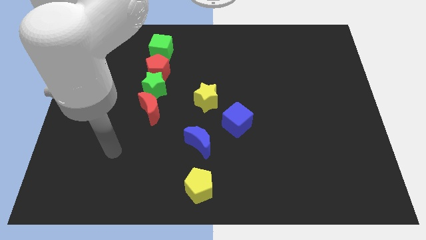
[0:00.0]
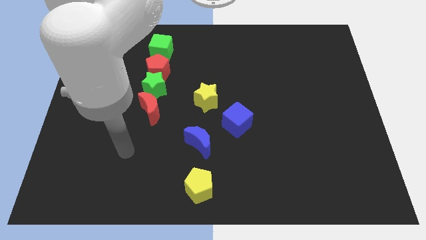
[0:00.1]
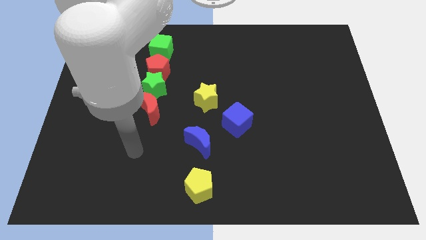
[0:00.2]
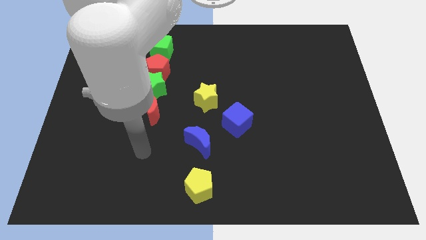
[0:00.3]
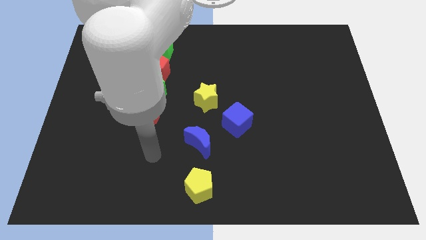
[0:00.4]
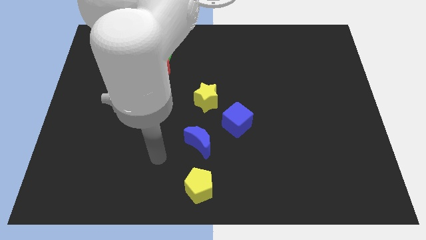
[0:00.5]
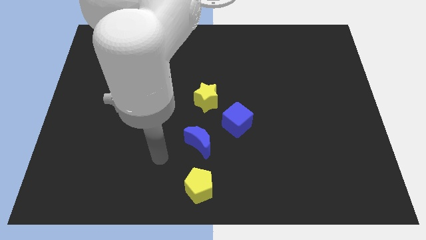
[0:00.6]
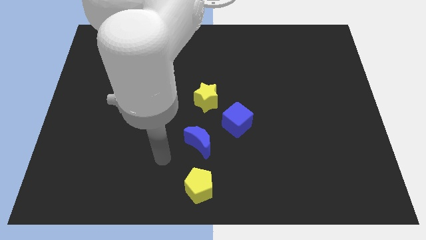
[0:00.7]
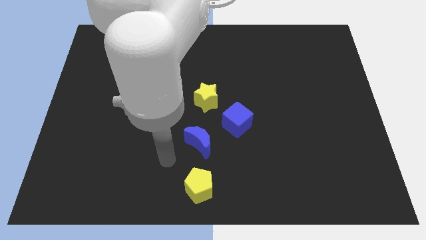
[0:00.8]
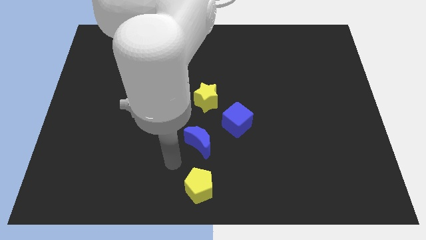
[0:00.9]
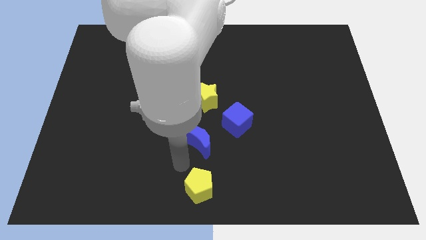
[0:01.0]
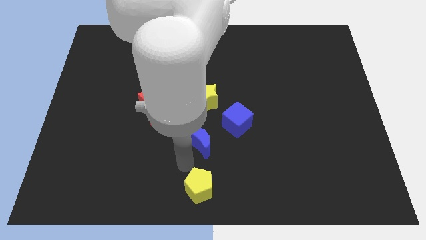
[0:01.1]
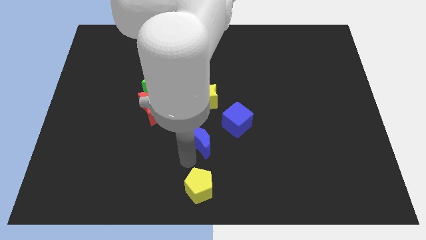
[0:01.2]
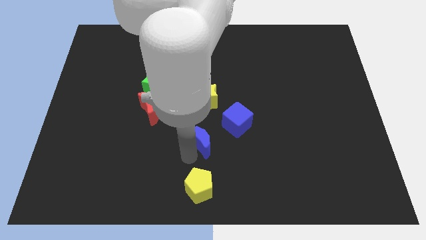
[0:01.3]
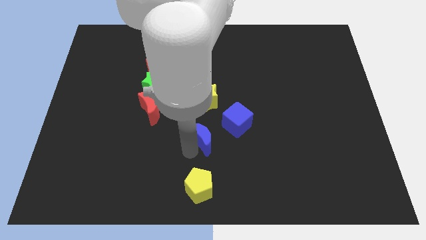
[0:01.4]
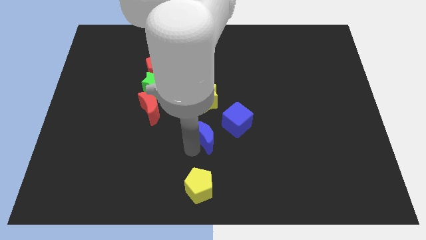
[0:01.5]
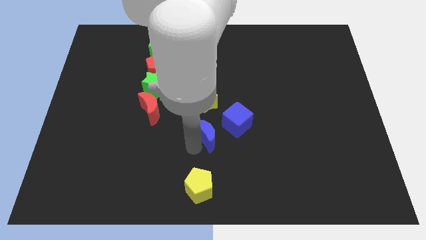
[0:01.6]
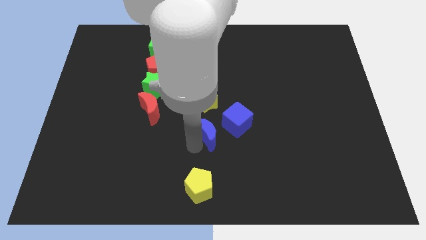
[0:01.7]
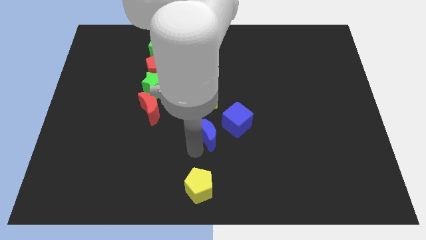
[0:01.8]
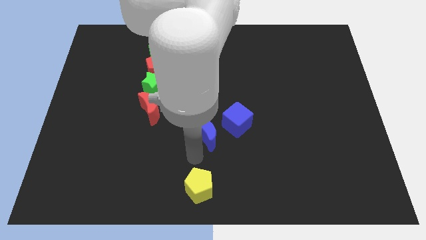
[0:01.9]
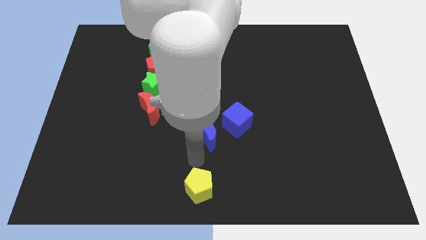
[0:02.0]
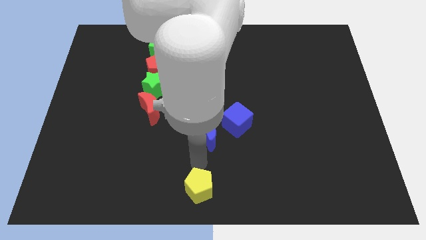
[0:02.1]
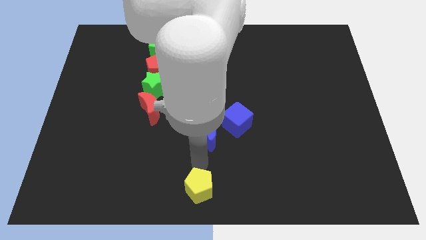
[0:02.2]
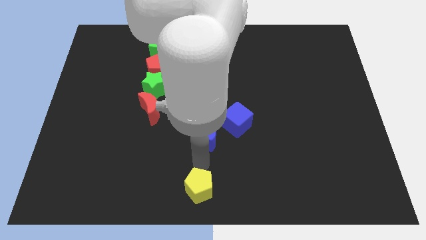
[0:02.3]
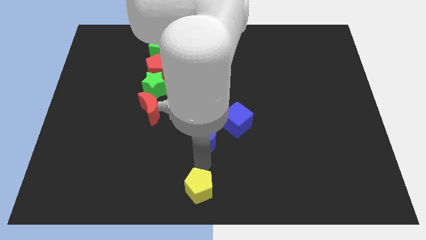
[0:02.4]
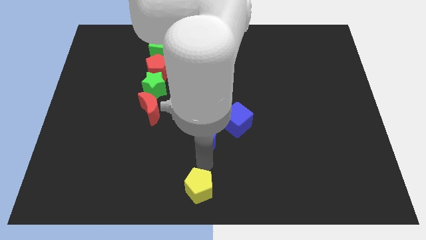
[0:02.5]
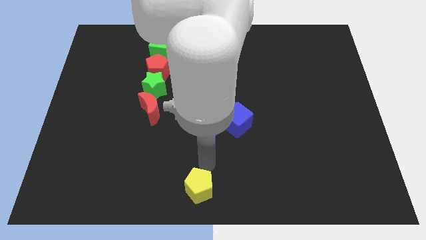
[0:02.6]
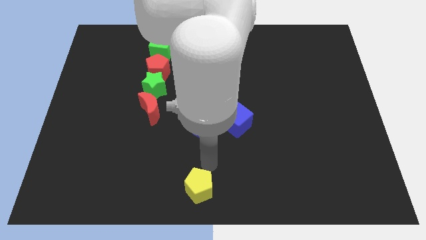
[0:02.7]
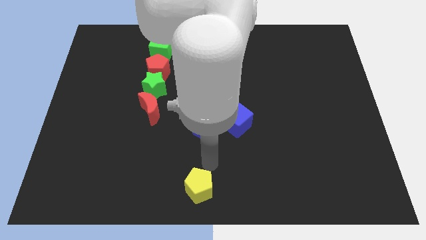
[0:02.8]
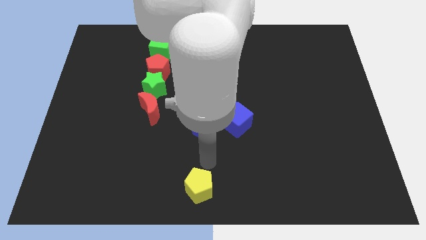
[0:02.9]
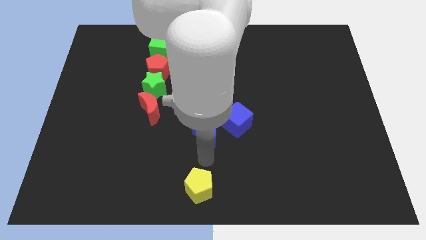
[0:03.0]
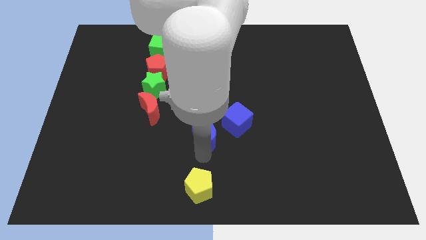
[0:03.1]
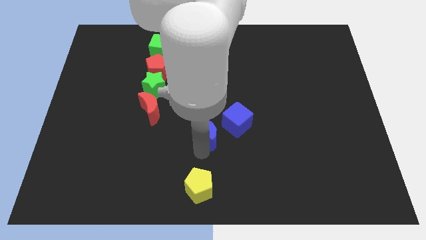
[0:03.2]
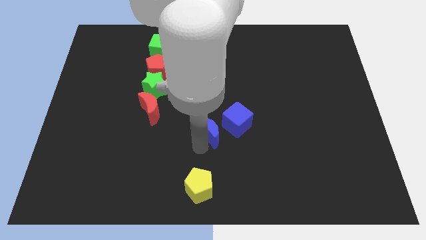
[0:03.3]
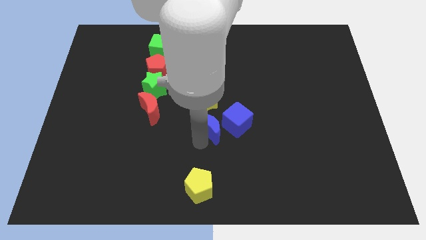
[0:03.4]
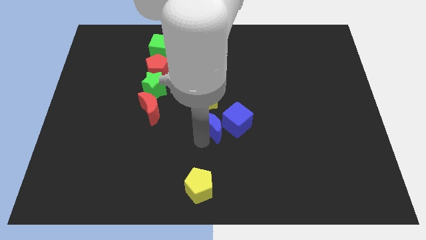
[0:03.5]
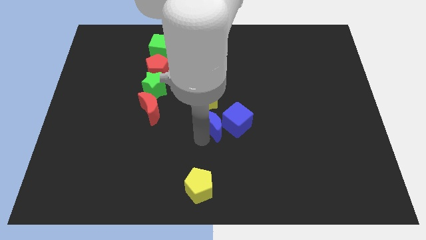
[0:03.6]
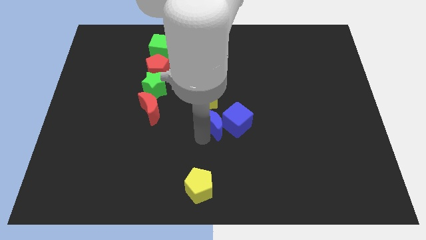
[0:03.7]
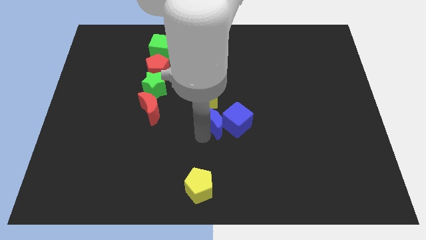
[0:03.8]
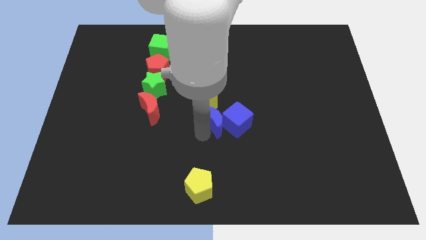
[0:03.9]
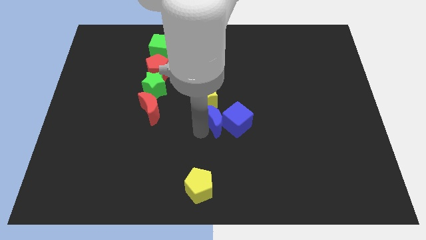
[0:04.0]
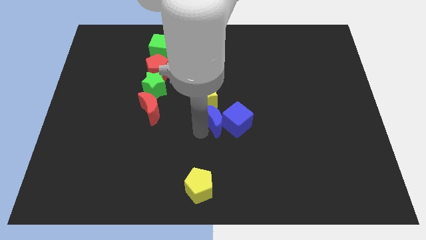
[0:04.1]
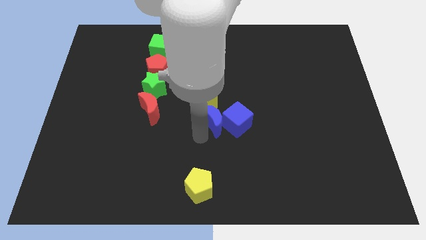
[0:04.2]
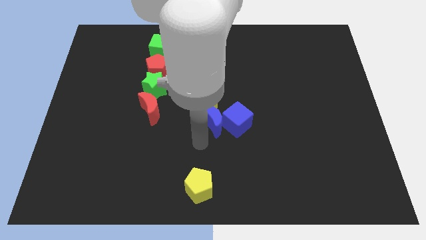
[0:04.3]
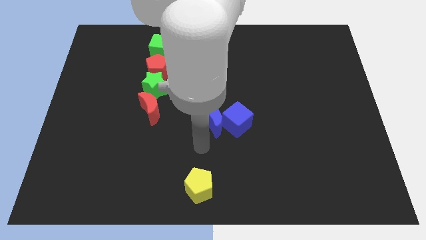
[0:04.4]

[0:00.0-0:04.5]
move the blue moon into yellow star

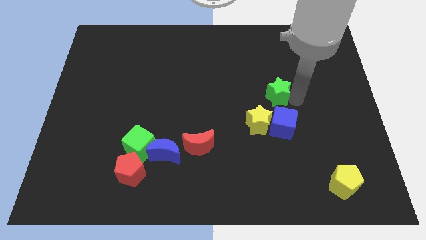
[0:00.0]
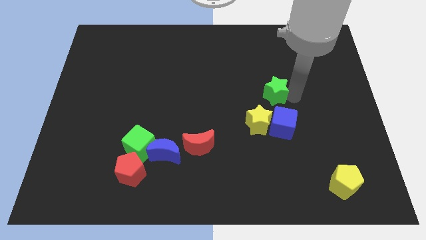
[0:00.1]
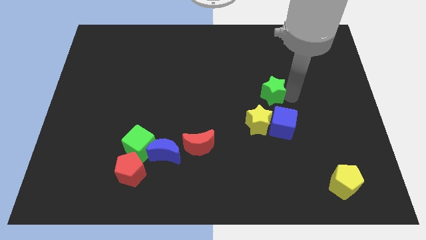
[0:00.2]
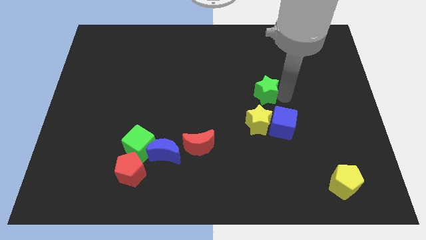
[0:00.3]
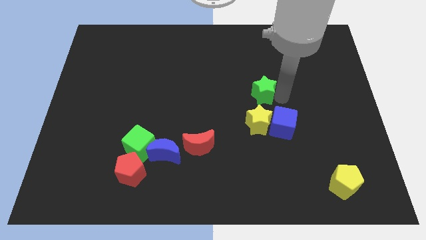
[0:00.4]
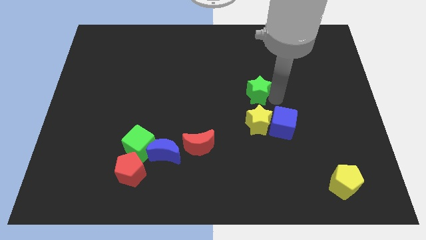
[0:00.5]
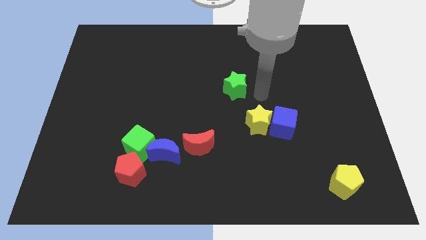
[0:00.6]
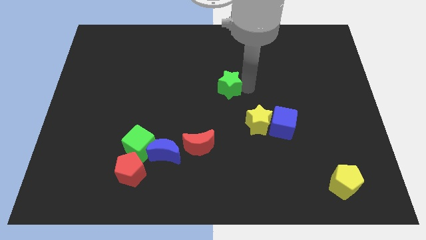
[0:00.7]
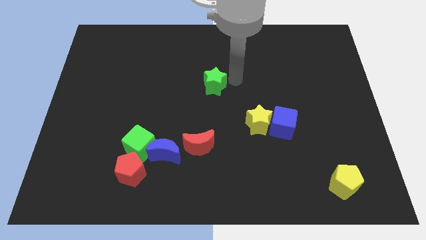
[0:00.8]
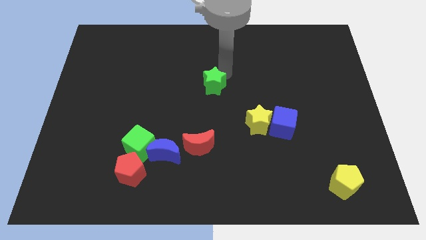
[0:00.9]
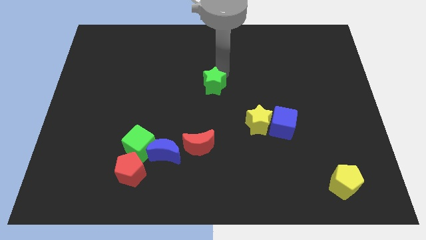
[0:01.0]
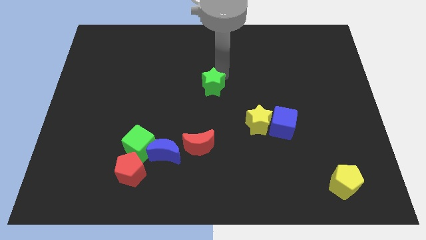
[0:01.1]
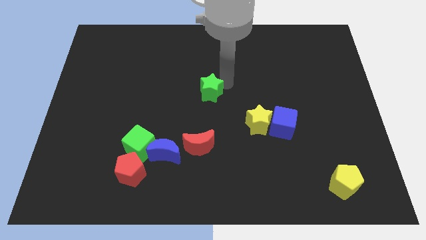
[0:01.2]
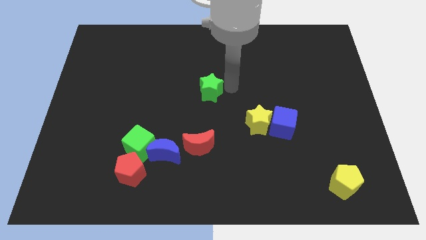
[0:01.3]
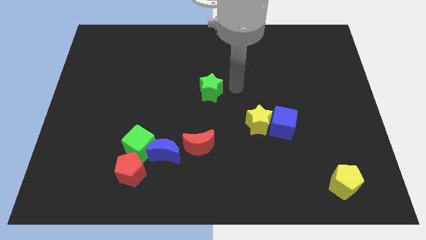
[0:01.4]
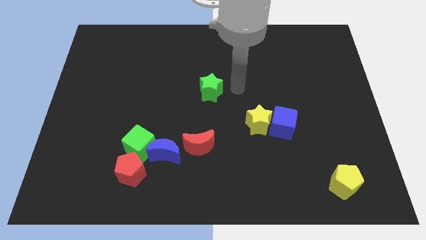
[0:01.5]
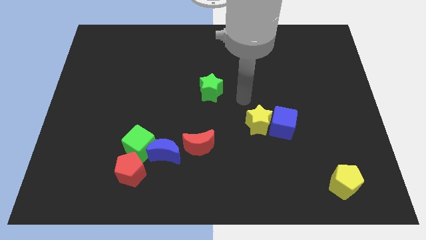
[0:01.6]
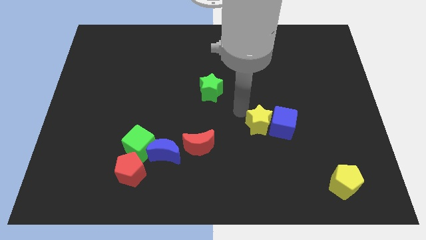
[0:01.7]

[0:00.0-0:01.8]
put the green star at the center of the board

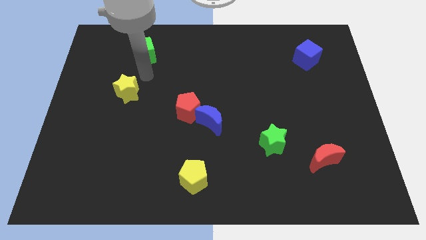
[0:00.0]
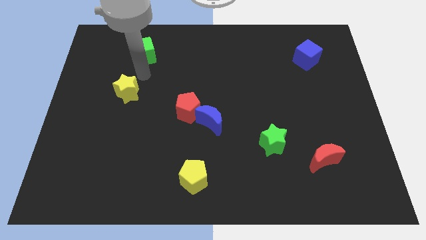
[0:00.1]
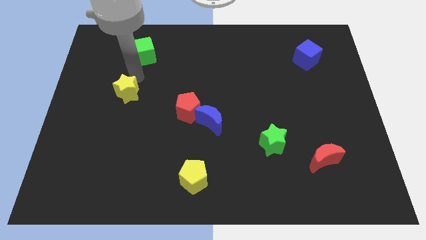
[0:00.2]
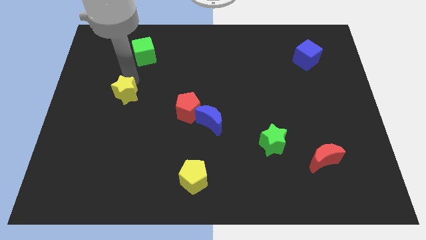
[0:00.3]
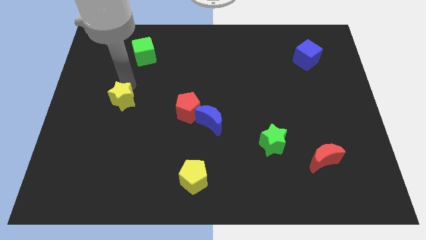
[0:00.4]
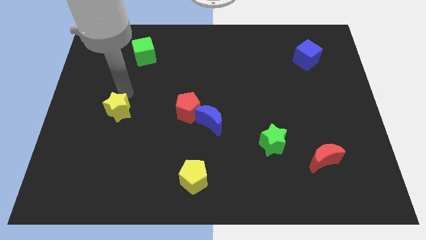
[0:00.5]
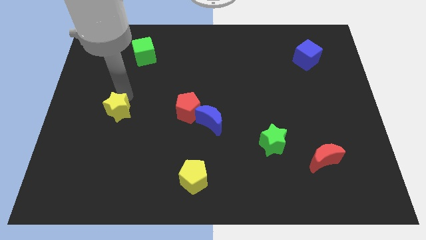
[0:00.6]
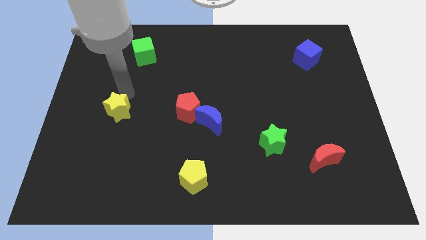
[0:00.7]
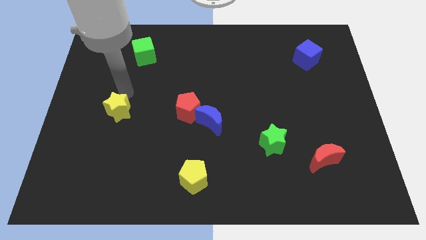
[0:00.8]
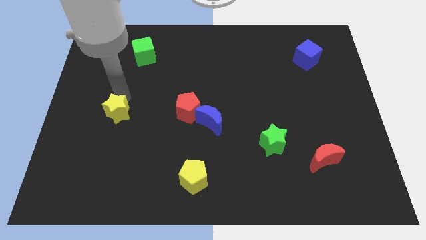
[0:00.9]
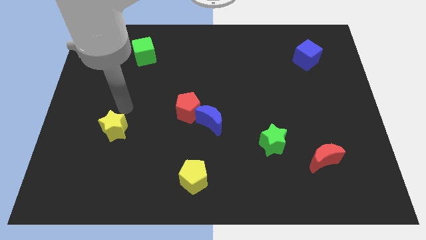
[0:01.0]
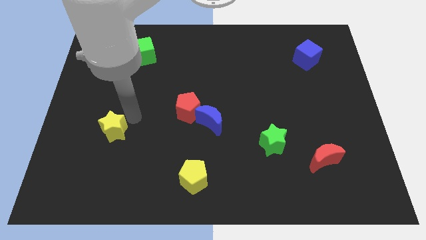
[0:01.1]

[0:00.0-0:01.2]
slightly push the yellow star

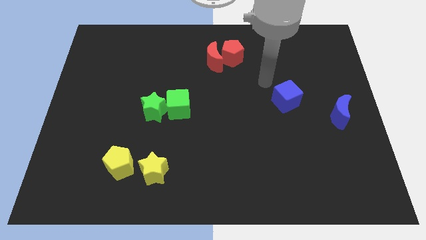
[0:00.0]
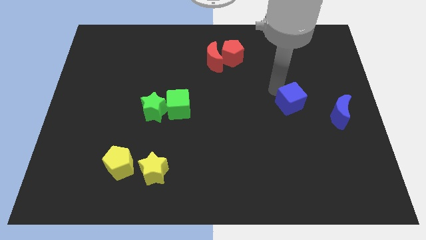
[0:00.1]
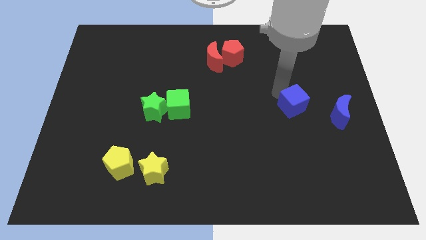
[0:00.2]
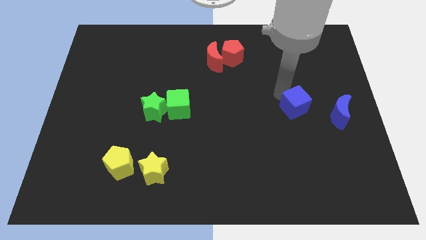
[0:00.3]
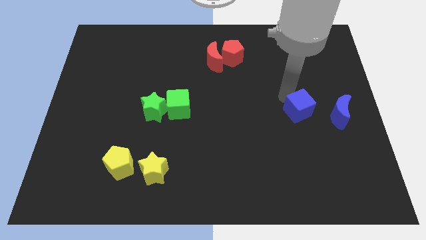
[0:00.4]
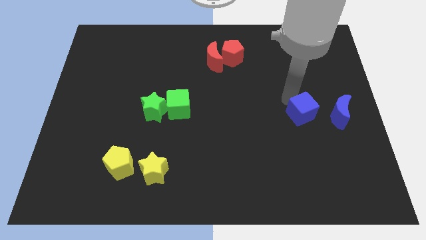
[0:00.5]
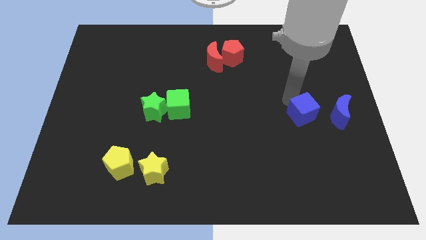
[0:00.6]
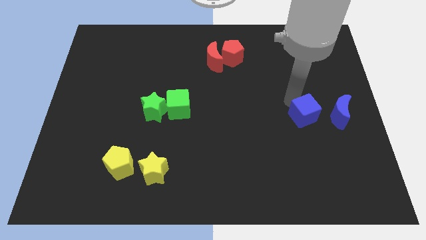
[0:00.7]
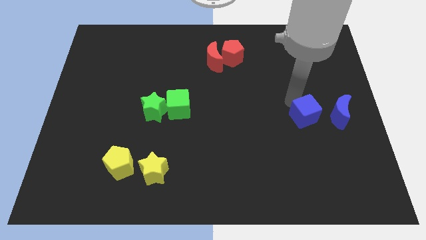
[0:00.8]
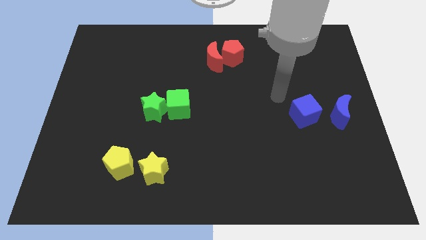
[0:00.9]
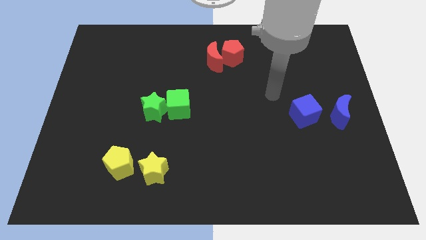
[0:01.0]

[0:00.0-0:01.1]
place the blue cube left to the blue moon

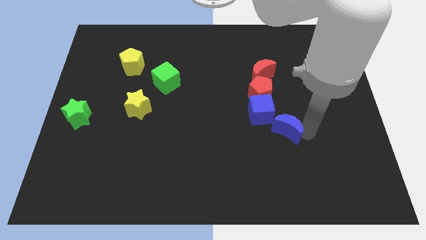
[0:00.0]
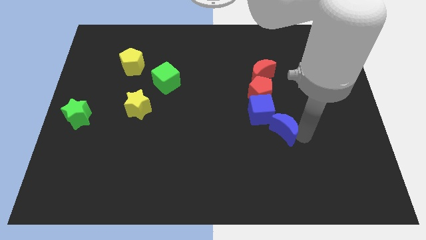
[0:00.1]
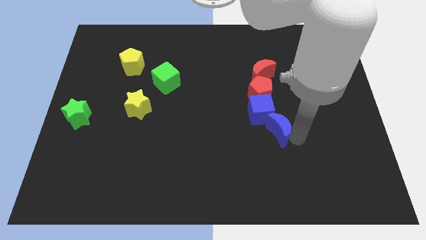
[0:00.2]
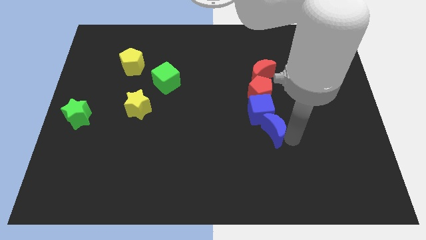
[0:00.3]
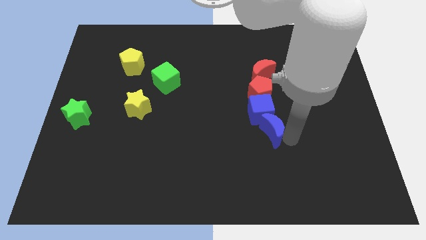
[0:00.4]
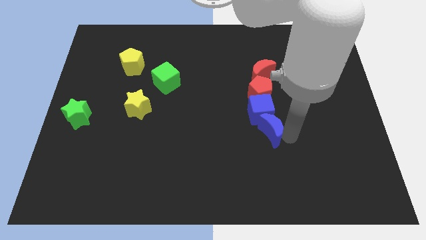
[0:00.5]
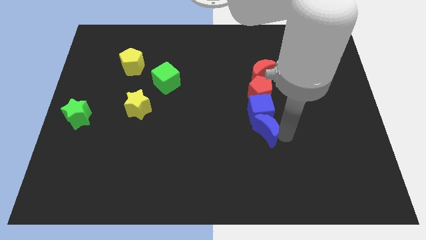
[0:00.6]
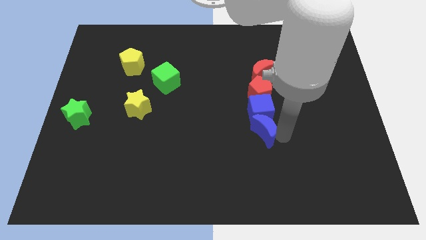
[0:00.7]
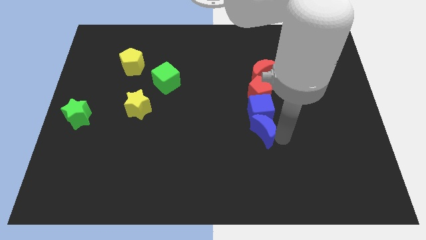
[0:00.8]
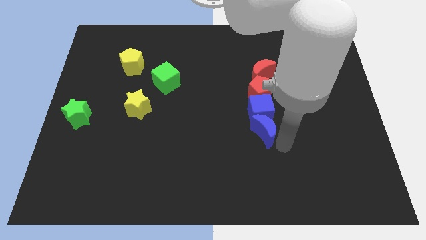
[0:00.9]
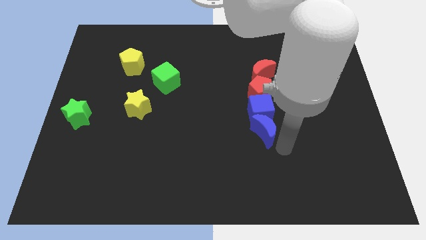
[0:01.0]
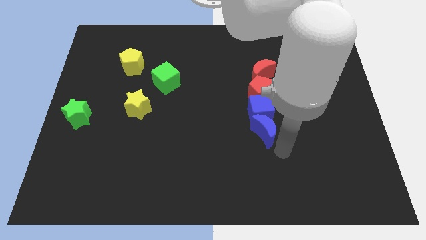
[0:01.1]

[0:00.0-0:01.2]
push the blue crescent toward the blue cube
